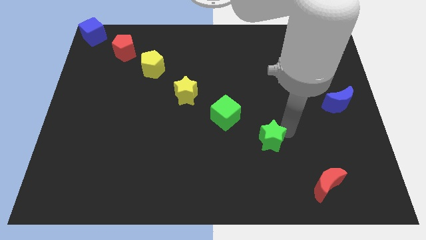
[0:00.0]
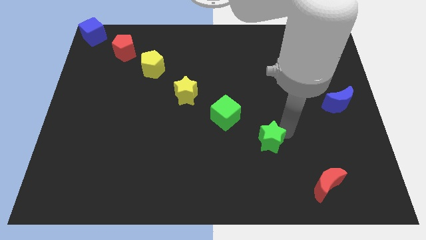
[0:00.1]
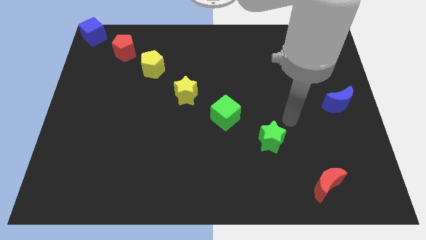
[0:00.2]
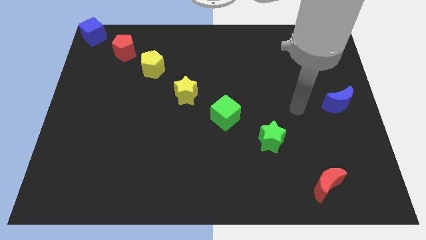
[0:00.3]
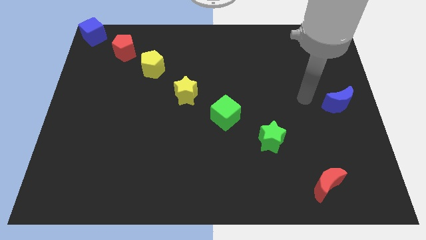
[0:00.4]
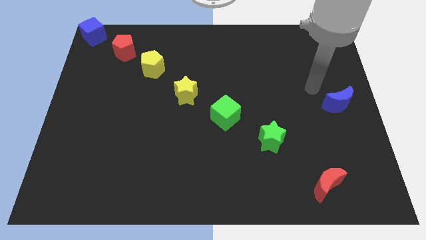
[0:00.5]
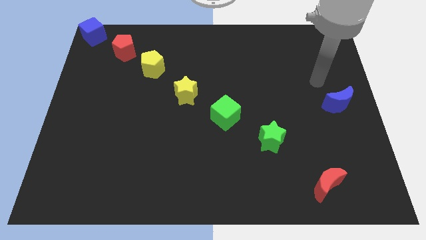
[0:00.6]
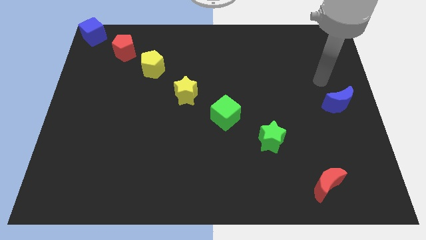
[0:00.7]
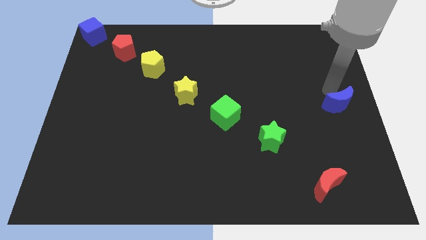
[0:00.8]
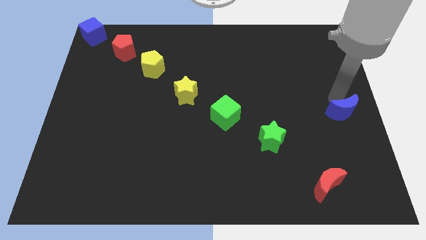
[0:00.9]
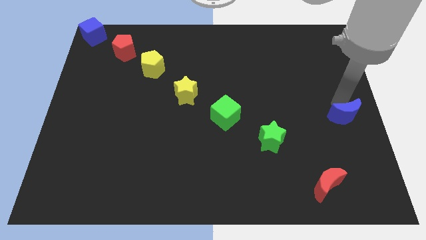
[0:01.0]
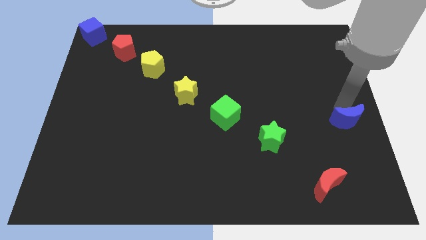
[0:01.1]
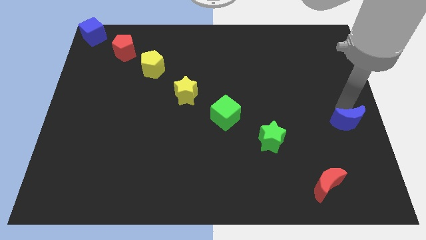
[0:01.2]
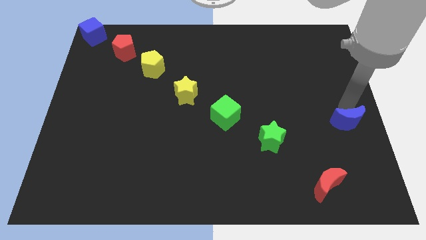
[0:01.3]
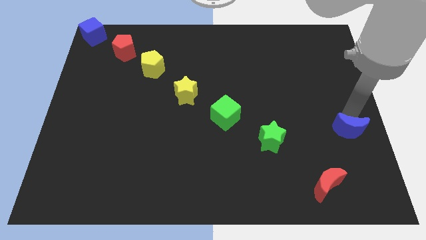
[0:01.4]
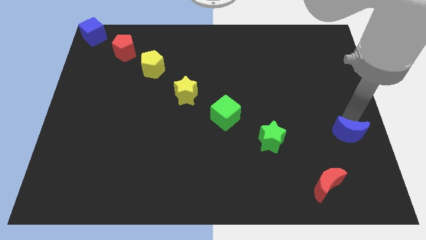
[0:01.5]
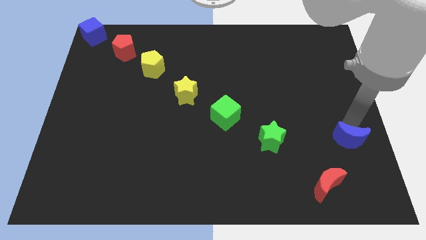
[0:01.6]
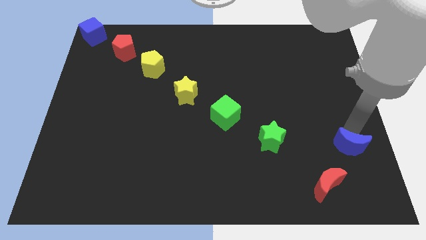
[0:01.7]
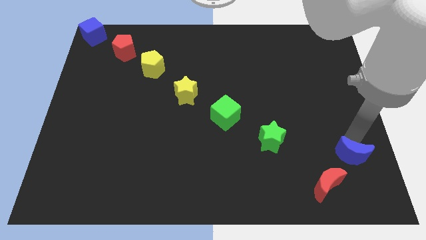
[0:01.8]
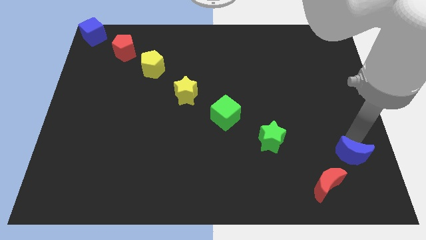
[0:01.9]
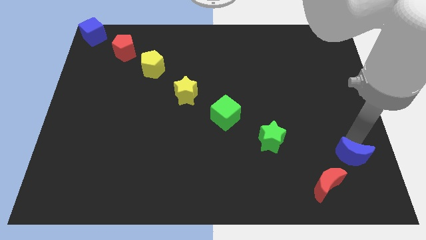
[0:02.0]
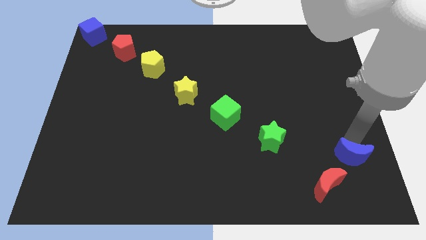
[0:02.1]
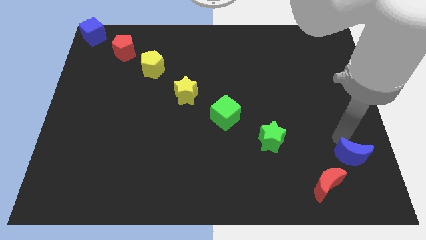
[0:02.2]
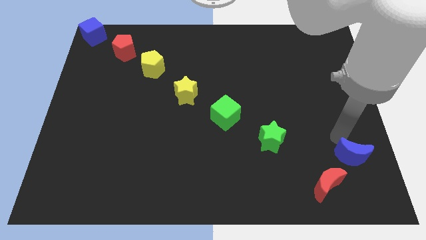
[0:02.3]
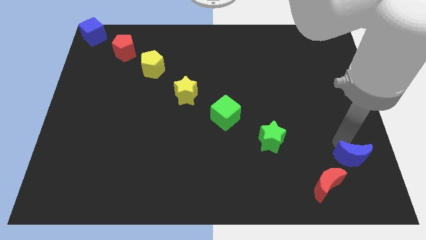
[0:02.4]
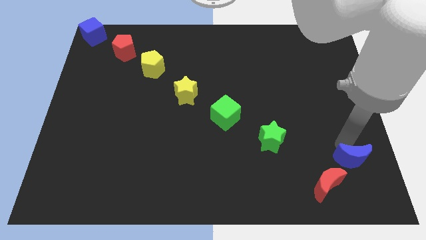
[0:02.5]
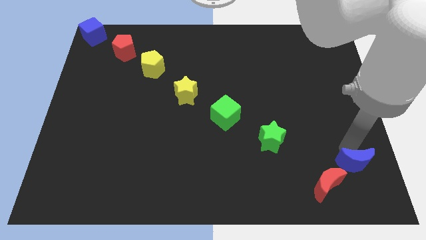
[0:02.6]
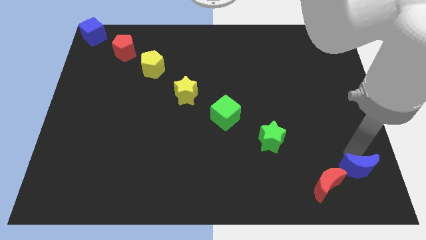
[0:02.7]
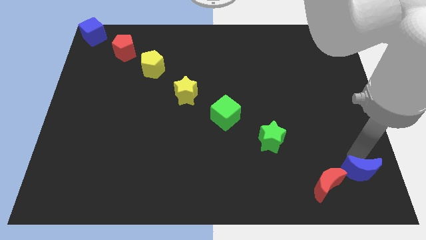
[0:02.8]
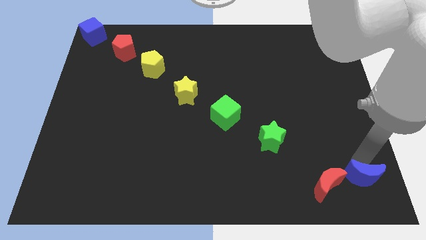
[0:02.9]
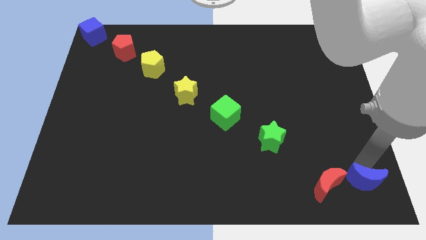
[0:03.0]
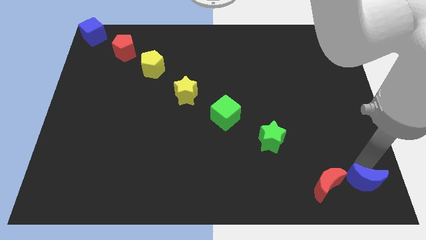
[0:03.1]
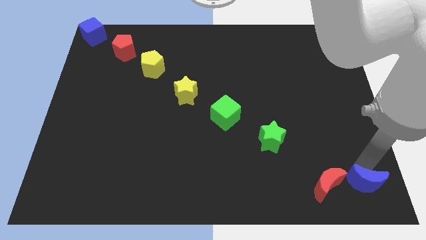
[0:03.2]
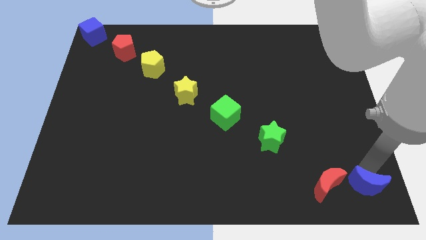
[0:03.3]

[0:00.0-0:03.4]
place the blue moon to the right of red moon

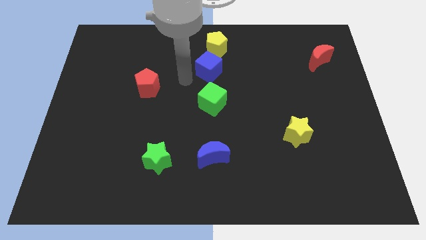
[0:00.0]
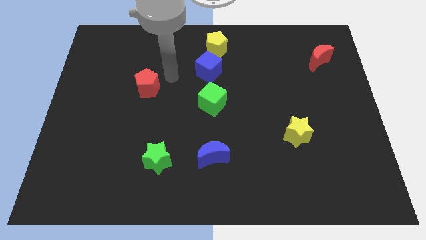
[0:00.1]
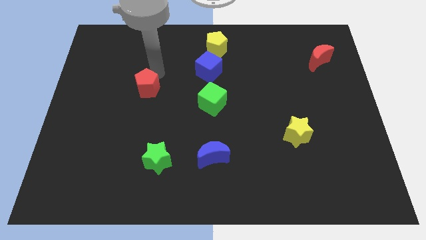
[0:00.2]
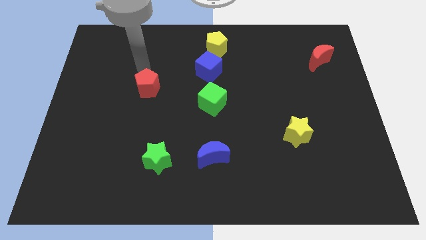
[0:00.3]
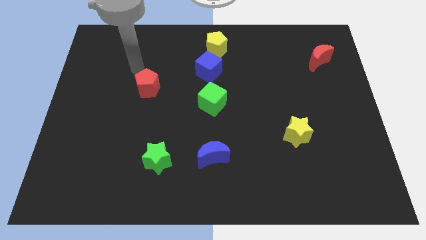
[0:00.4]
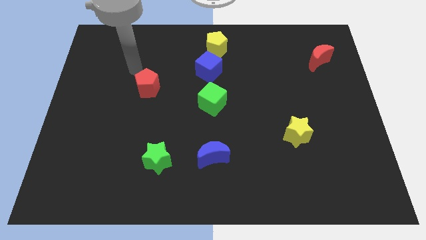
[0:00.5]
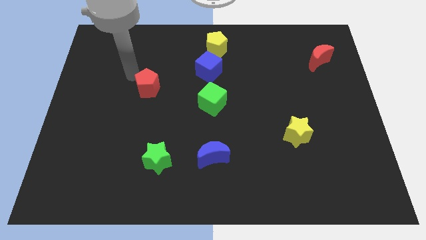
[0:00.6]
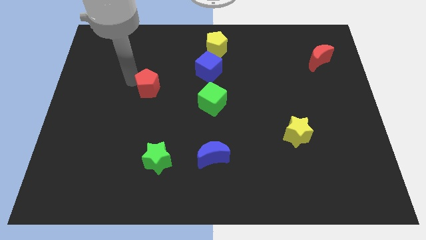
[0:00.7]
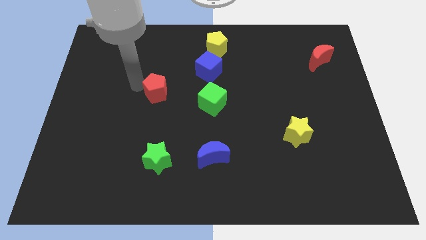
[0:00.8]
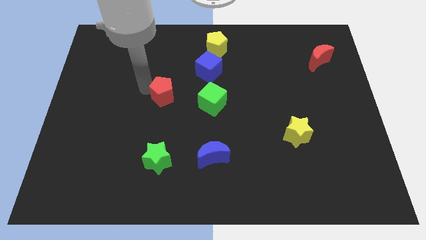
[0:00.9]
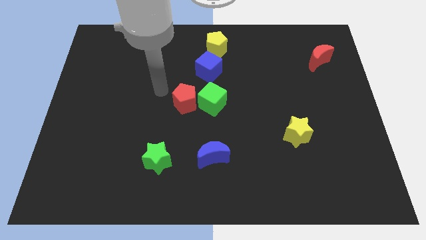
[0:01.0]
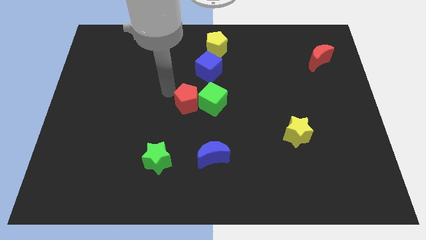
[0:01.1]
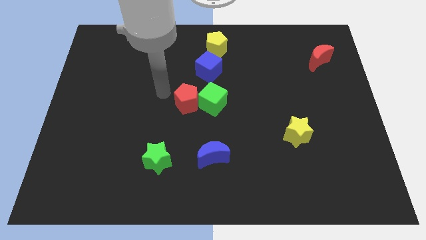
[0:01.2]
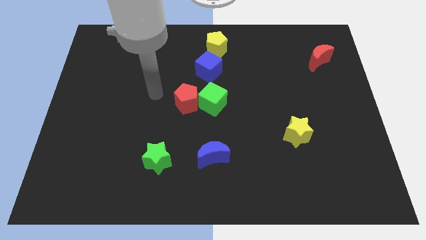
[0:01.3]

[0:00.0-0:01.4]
push the red pentagon into green cube

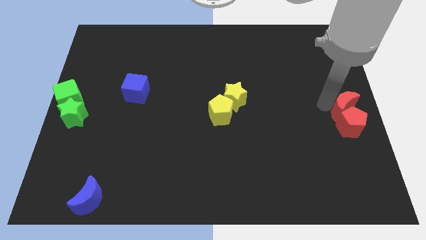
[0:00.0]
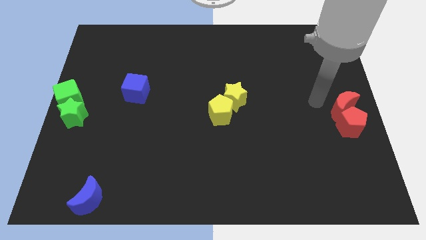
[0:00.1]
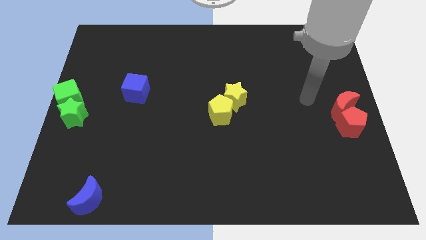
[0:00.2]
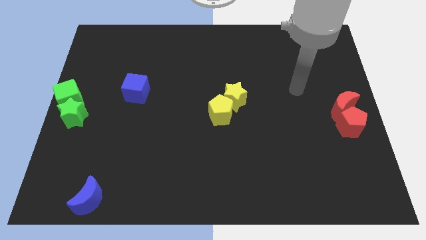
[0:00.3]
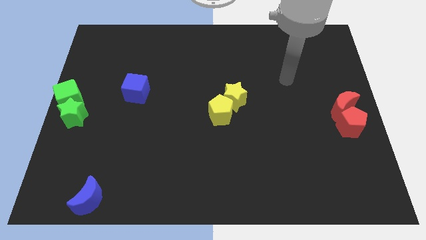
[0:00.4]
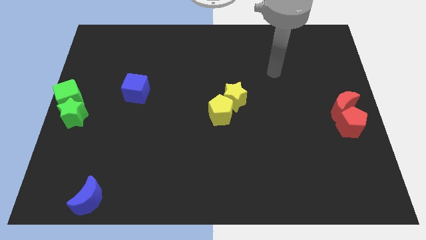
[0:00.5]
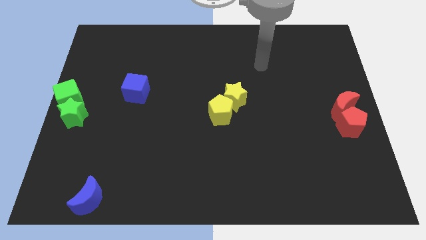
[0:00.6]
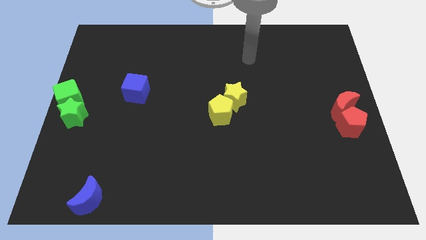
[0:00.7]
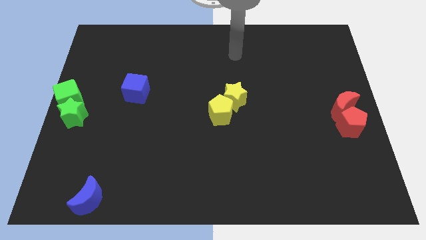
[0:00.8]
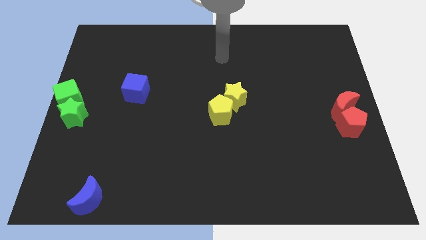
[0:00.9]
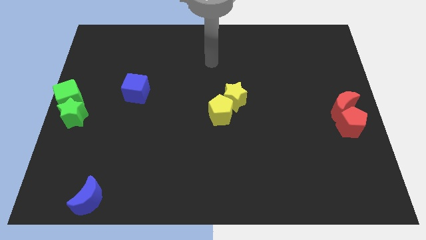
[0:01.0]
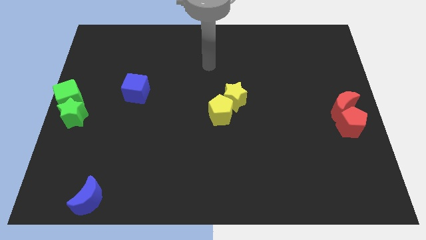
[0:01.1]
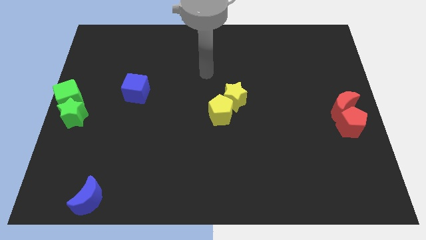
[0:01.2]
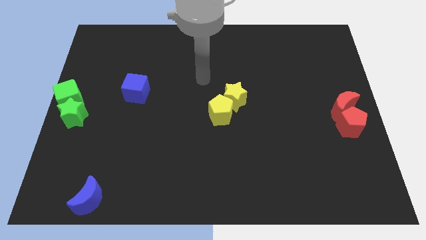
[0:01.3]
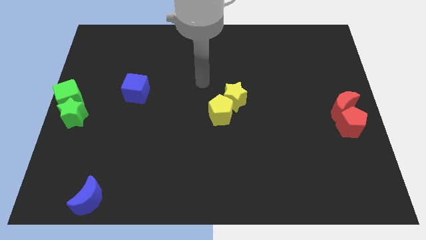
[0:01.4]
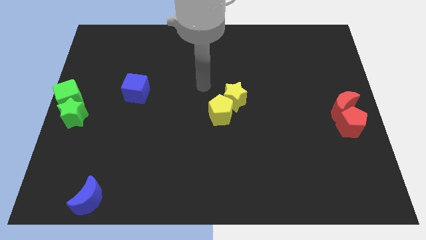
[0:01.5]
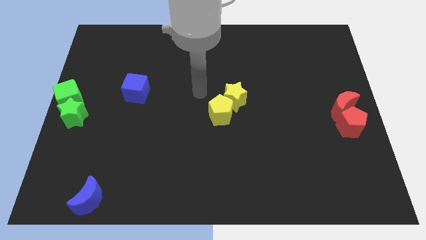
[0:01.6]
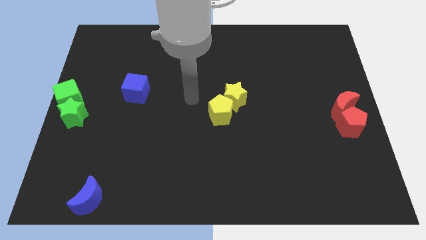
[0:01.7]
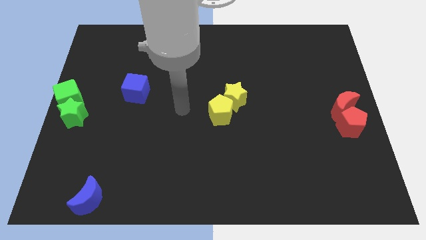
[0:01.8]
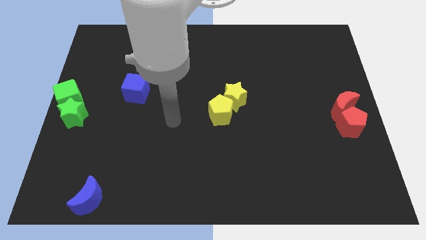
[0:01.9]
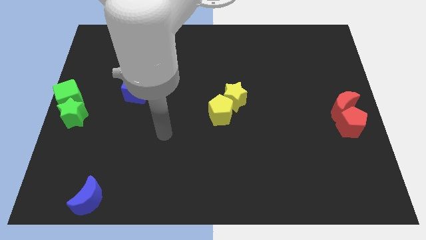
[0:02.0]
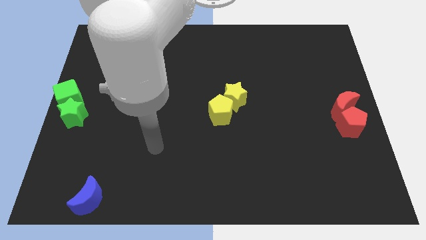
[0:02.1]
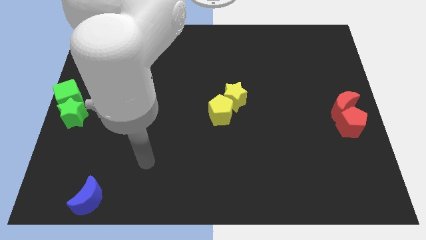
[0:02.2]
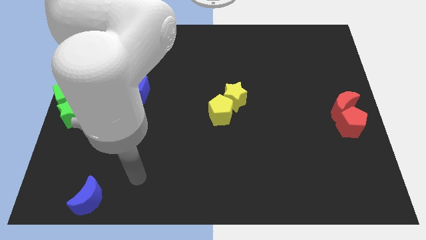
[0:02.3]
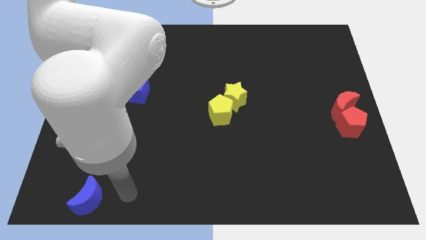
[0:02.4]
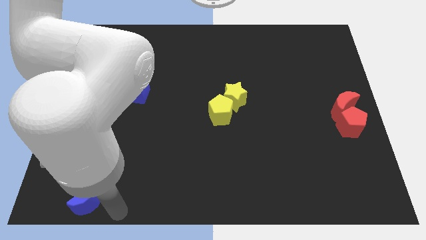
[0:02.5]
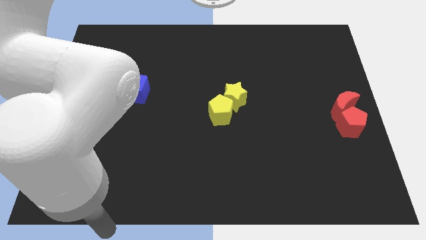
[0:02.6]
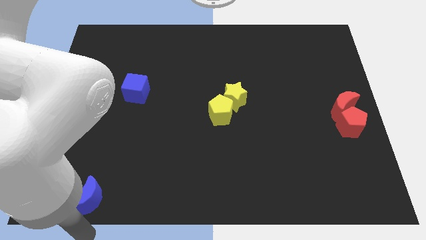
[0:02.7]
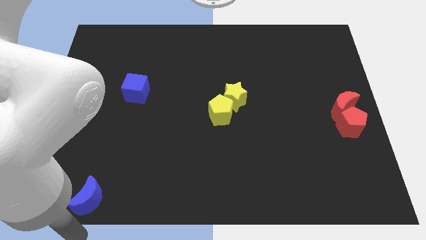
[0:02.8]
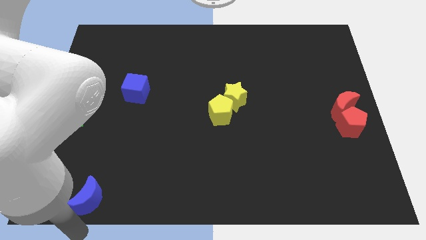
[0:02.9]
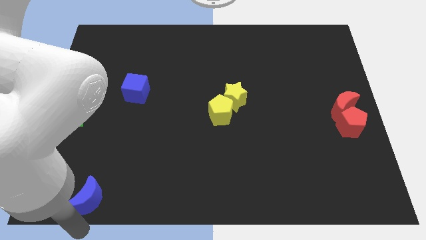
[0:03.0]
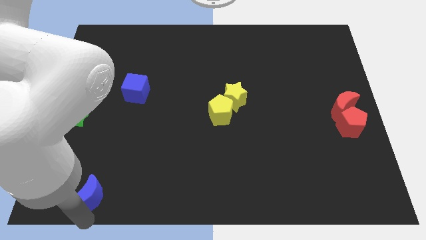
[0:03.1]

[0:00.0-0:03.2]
move the arm to the bottom side of the blue moon

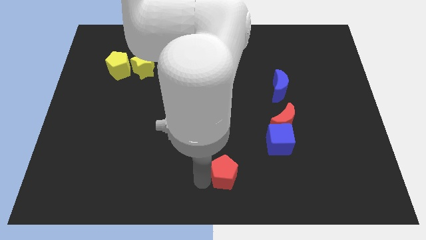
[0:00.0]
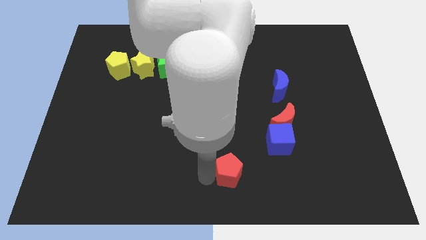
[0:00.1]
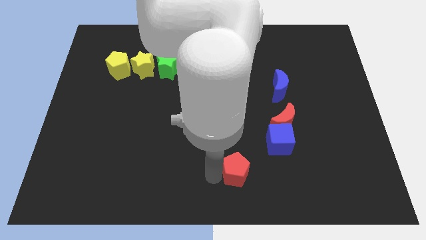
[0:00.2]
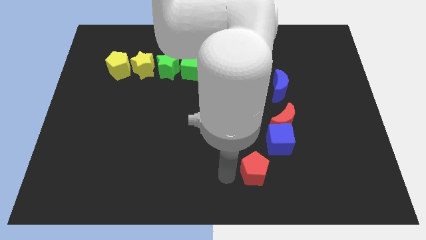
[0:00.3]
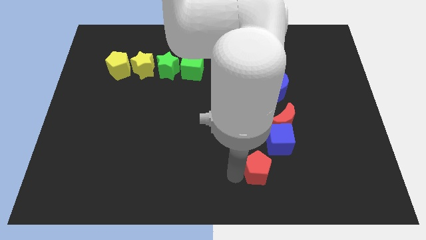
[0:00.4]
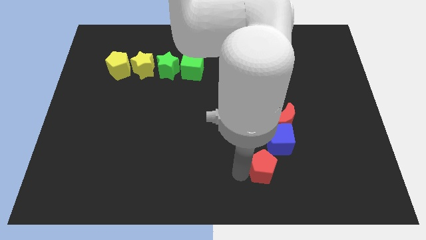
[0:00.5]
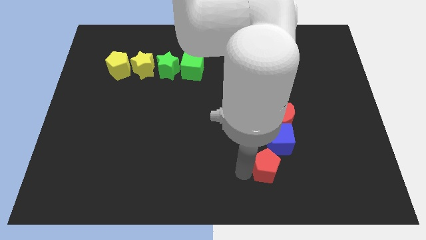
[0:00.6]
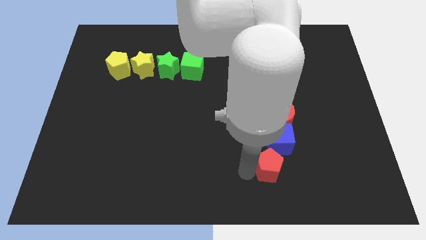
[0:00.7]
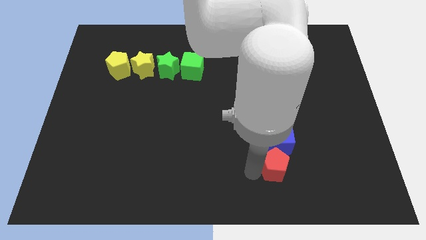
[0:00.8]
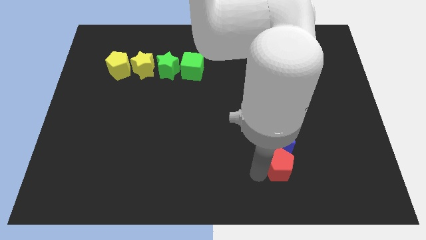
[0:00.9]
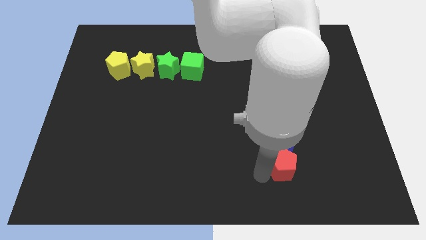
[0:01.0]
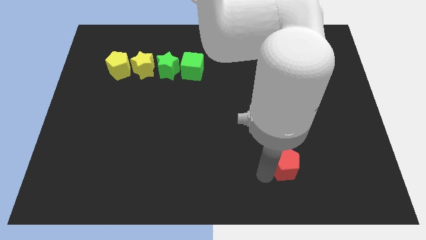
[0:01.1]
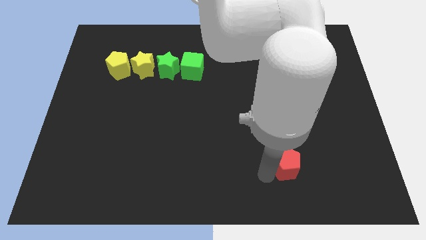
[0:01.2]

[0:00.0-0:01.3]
place the red pentagon below to the blue cube
